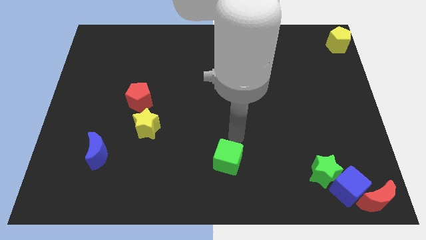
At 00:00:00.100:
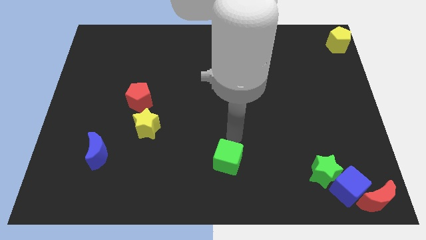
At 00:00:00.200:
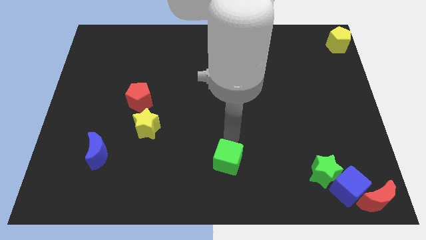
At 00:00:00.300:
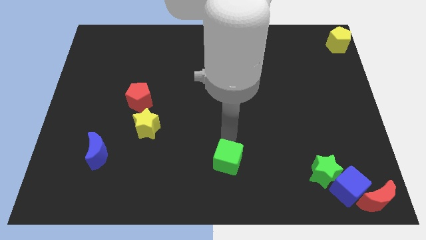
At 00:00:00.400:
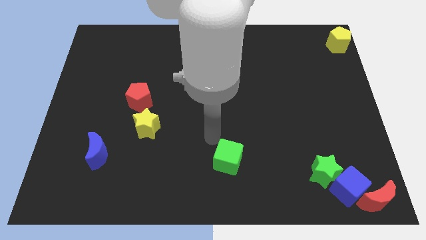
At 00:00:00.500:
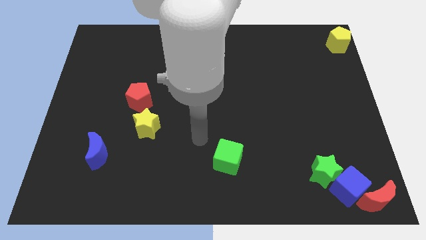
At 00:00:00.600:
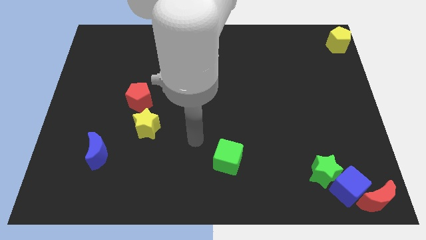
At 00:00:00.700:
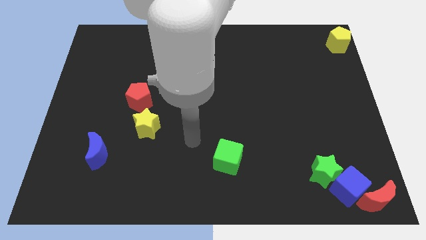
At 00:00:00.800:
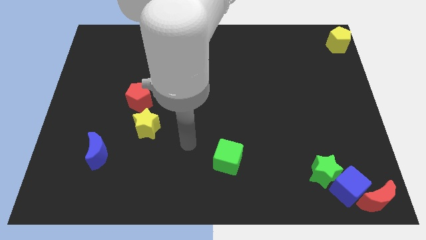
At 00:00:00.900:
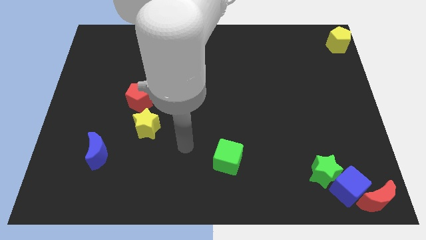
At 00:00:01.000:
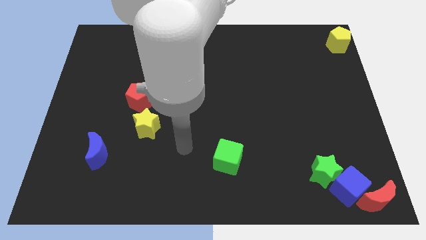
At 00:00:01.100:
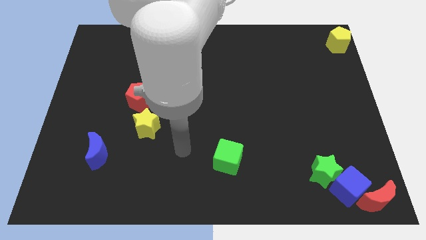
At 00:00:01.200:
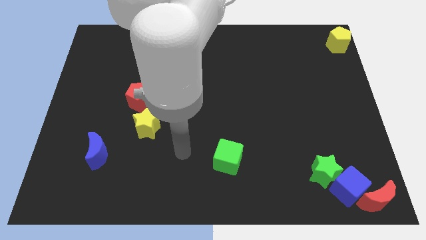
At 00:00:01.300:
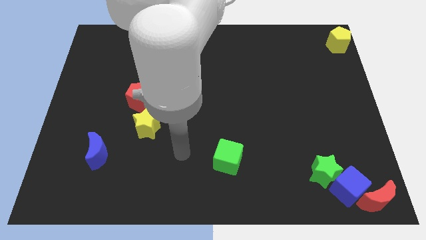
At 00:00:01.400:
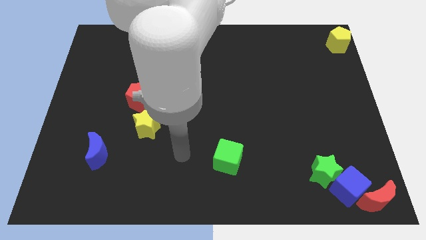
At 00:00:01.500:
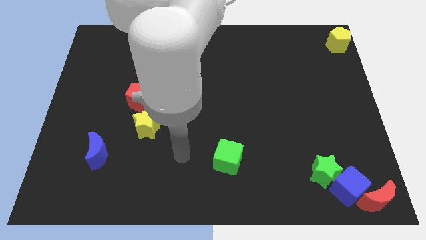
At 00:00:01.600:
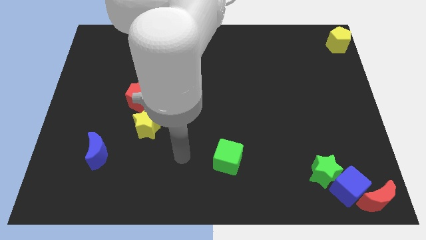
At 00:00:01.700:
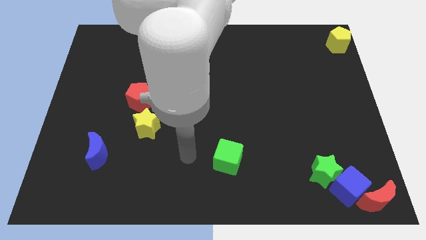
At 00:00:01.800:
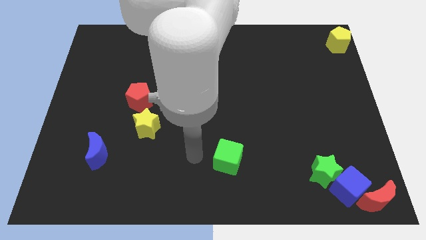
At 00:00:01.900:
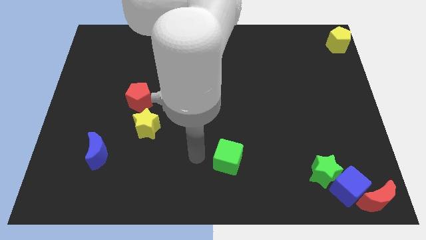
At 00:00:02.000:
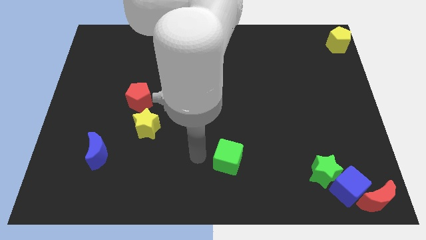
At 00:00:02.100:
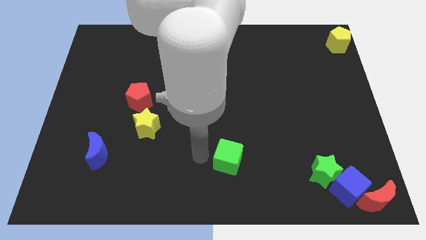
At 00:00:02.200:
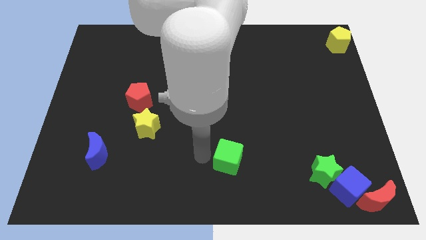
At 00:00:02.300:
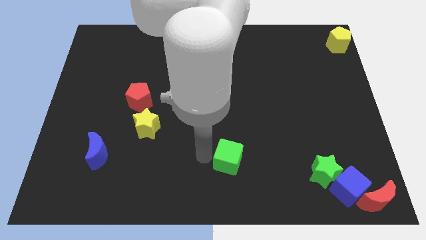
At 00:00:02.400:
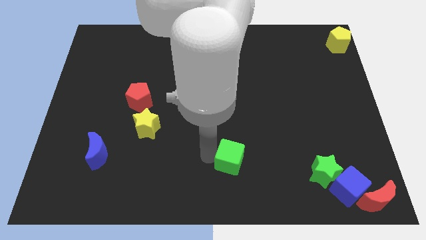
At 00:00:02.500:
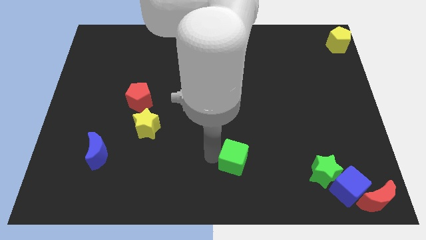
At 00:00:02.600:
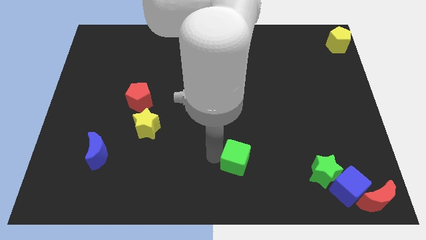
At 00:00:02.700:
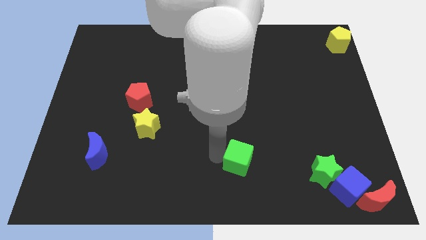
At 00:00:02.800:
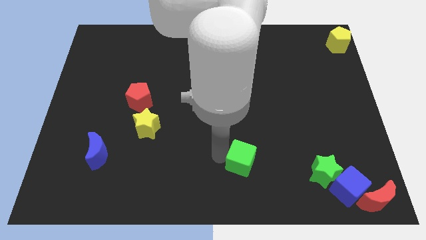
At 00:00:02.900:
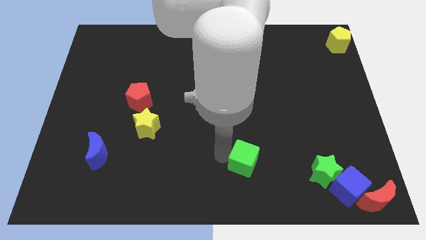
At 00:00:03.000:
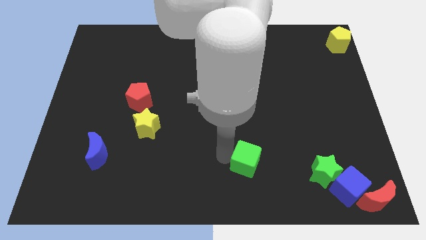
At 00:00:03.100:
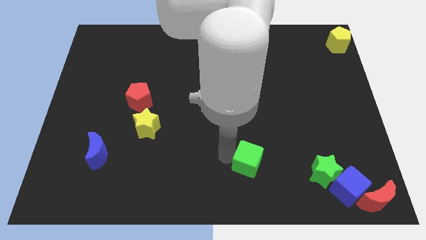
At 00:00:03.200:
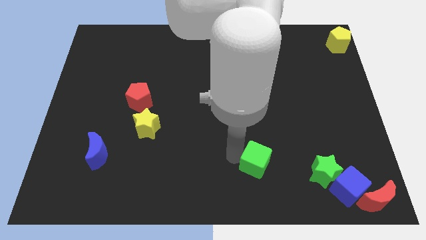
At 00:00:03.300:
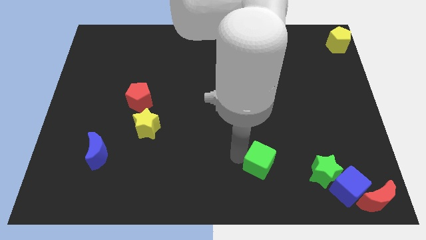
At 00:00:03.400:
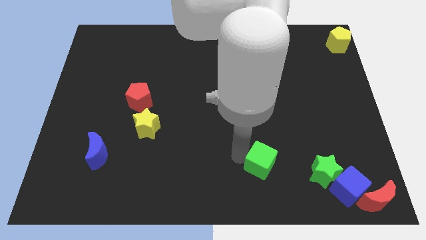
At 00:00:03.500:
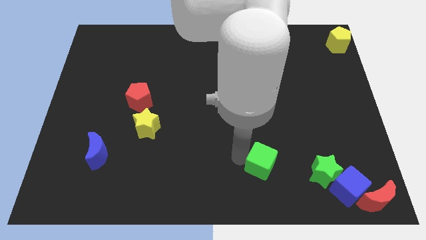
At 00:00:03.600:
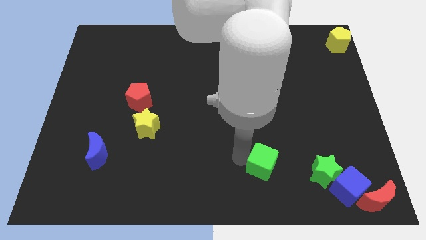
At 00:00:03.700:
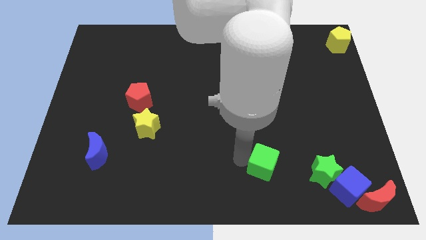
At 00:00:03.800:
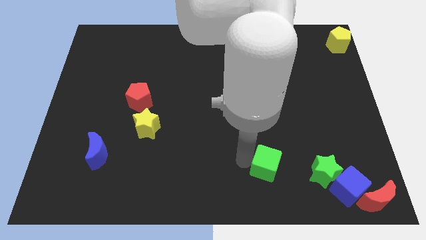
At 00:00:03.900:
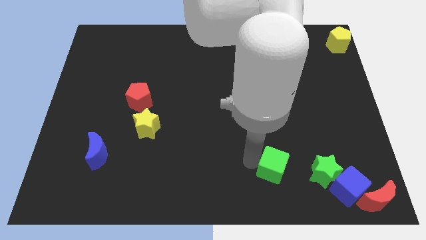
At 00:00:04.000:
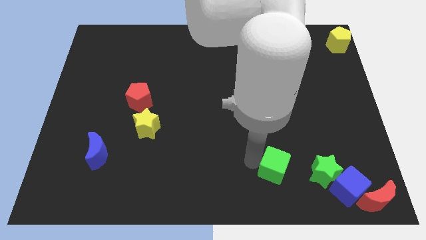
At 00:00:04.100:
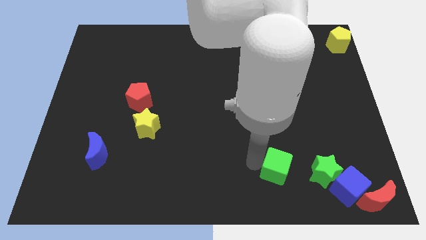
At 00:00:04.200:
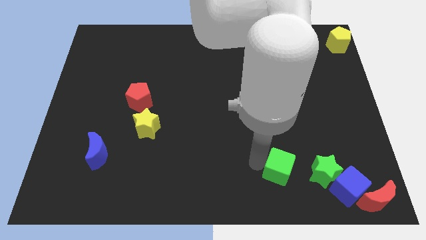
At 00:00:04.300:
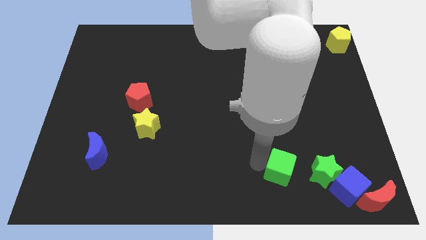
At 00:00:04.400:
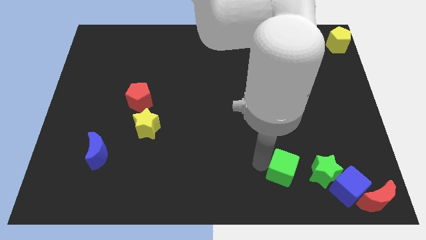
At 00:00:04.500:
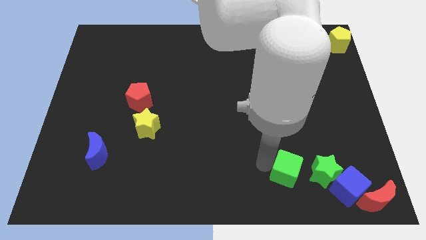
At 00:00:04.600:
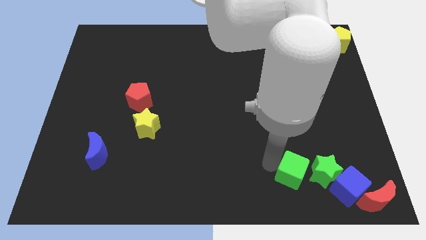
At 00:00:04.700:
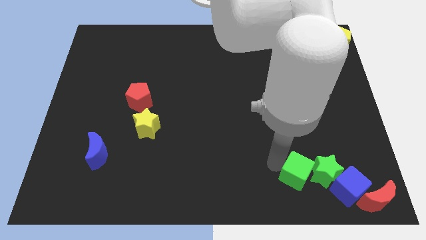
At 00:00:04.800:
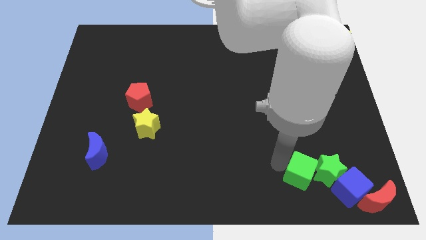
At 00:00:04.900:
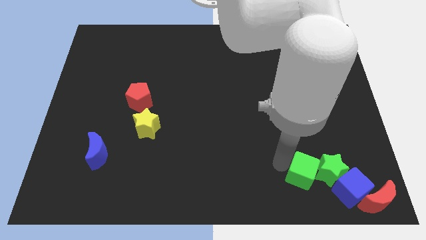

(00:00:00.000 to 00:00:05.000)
push the green cube into the green star

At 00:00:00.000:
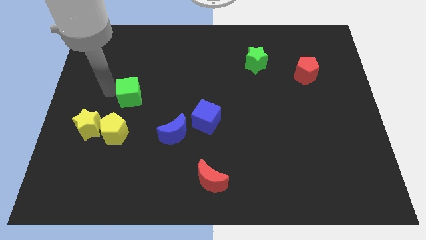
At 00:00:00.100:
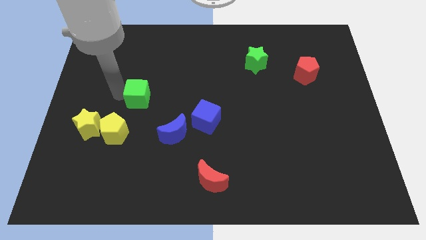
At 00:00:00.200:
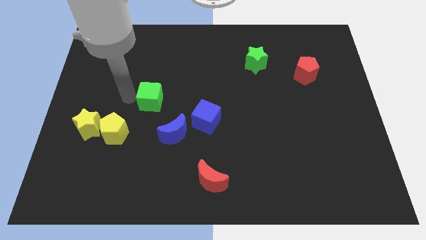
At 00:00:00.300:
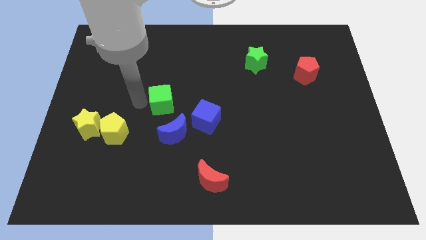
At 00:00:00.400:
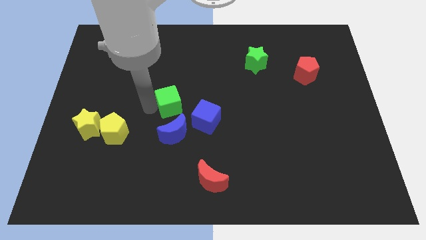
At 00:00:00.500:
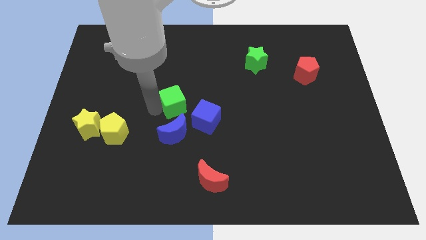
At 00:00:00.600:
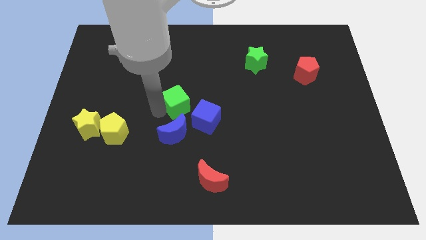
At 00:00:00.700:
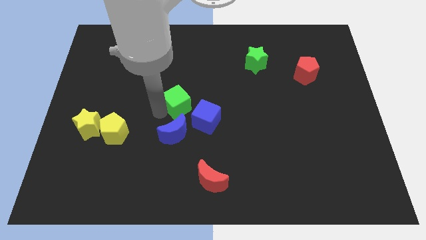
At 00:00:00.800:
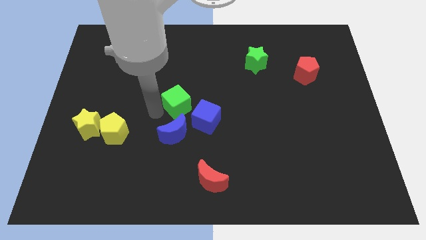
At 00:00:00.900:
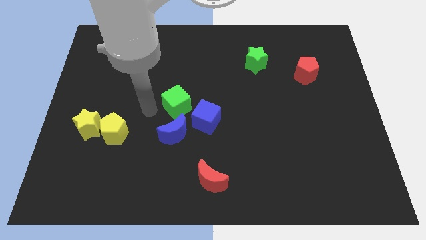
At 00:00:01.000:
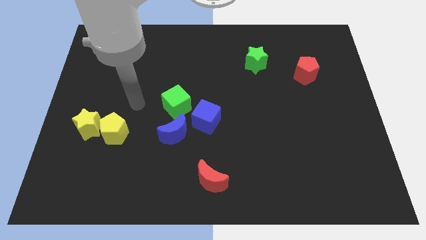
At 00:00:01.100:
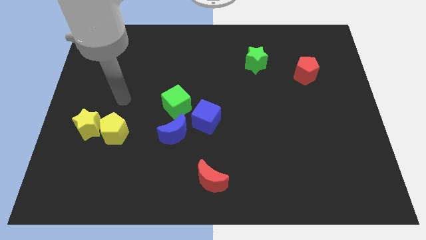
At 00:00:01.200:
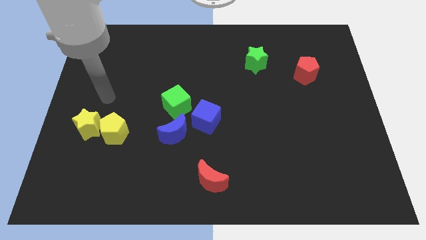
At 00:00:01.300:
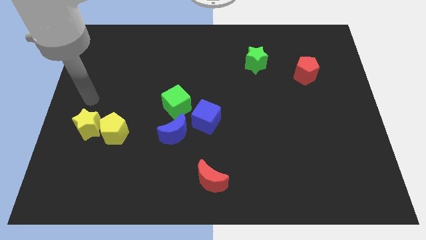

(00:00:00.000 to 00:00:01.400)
slide the green cube slightly towards the blue cube

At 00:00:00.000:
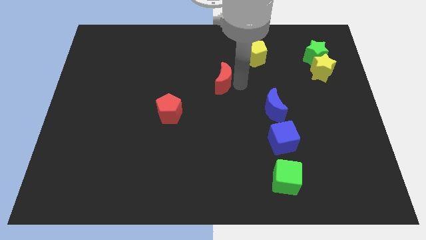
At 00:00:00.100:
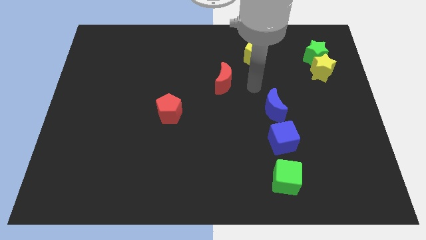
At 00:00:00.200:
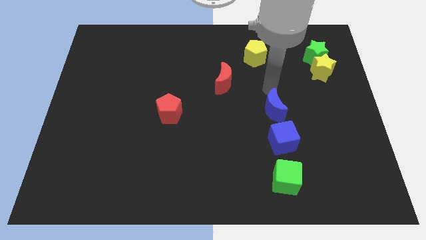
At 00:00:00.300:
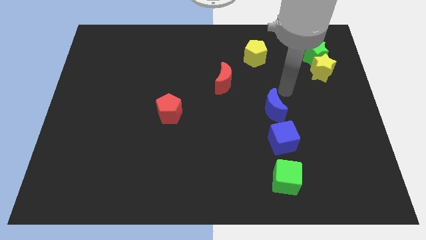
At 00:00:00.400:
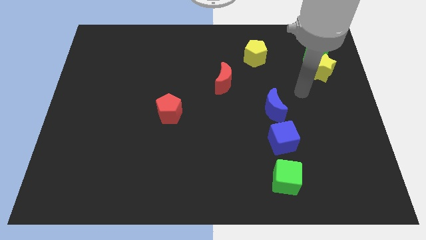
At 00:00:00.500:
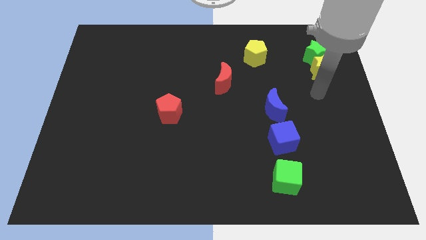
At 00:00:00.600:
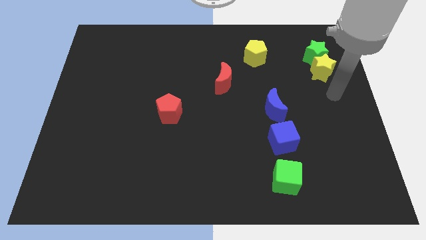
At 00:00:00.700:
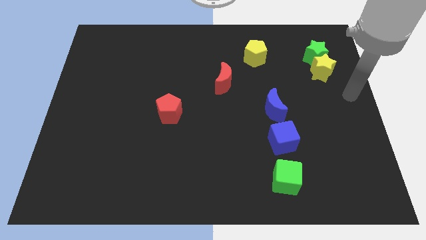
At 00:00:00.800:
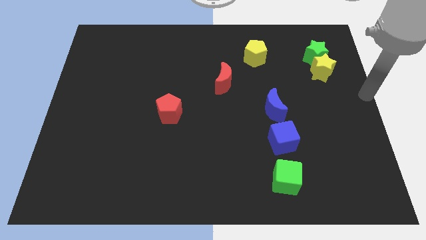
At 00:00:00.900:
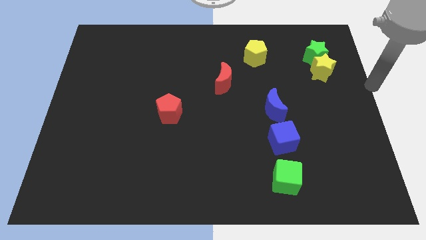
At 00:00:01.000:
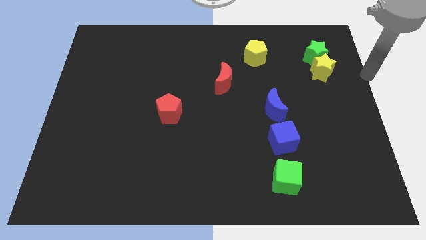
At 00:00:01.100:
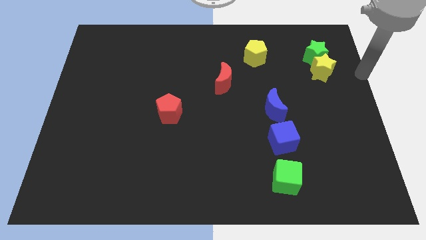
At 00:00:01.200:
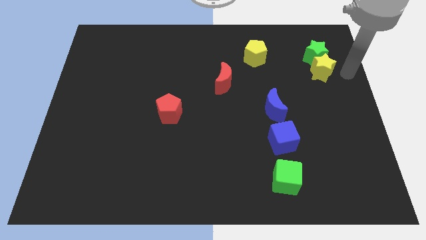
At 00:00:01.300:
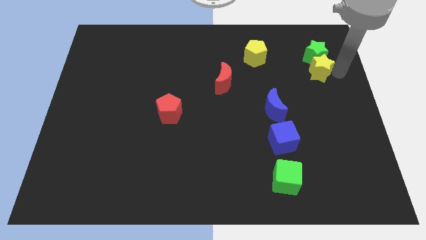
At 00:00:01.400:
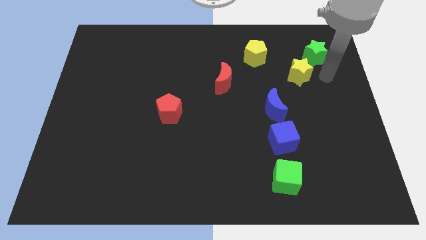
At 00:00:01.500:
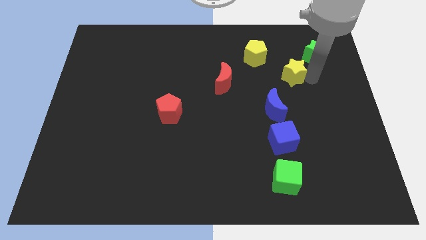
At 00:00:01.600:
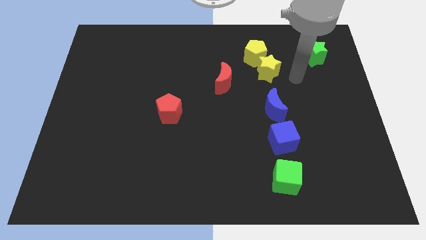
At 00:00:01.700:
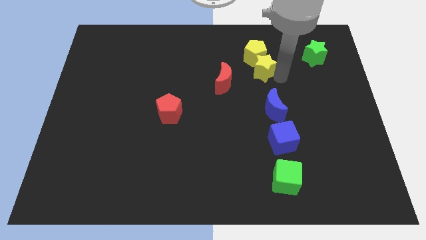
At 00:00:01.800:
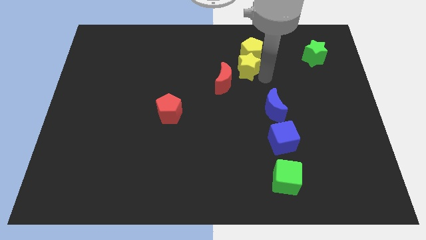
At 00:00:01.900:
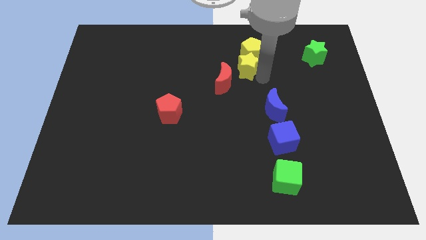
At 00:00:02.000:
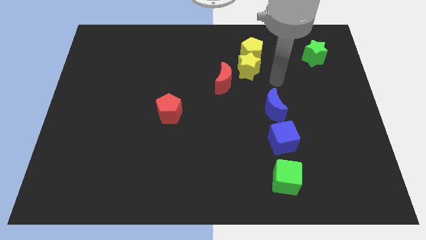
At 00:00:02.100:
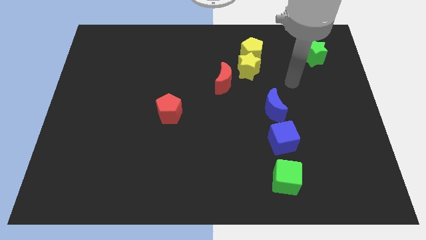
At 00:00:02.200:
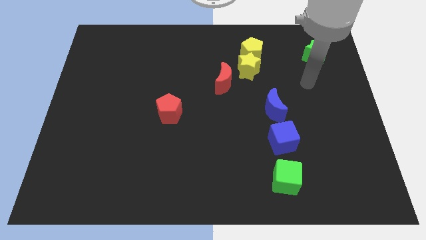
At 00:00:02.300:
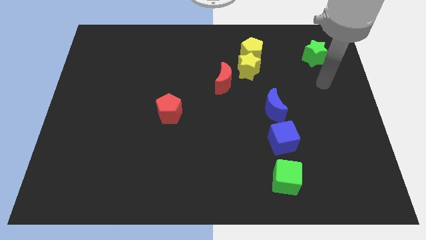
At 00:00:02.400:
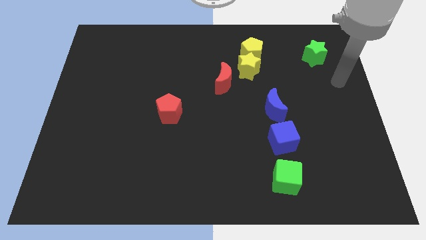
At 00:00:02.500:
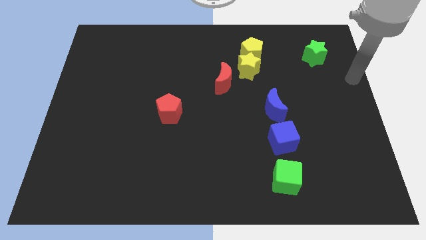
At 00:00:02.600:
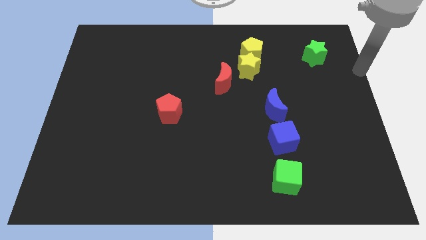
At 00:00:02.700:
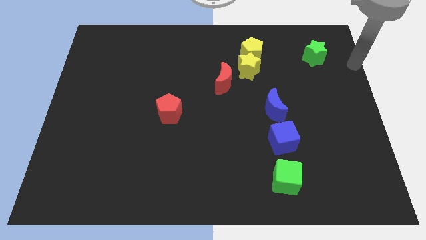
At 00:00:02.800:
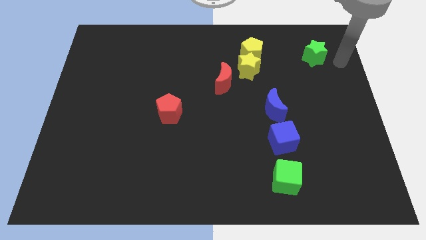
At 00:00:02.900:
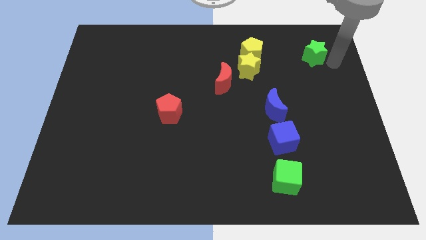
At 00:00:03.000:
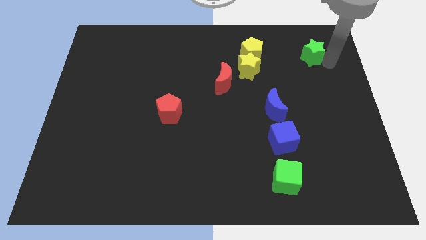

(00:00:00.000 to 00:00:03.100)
push the yellow star into the yellow pentagon
